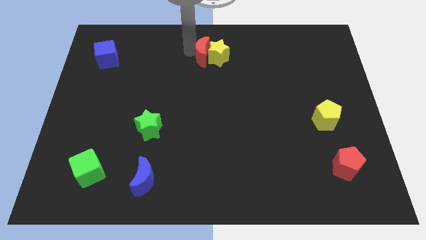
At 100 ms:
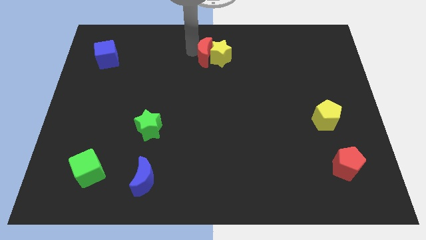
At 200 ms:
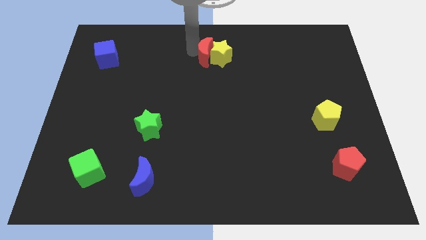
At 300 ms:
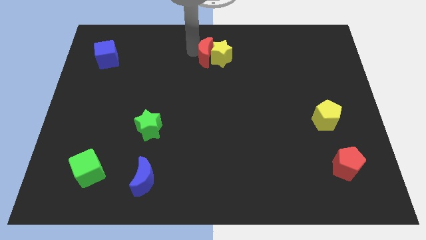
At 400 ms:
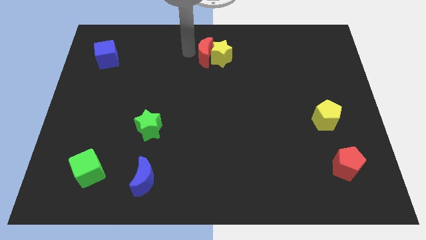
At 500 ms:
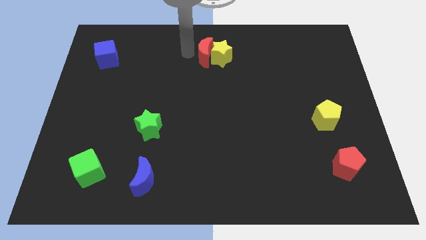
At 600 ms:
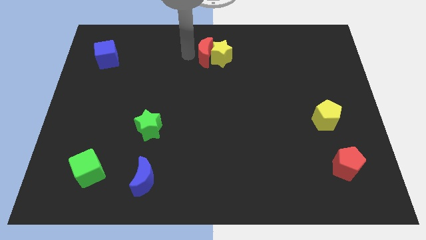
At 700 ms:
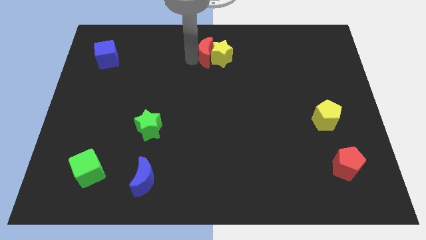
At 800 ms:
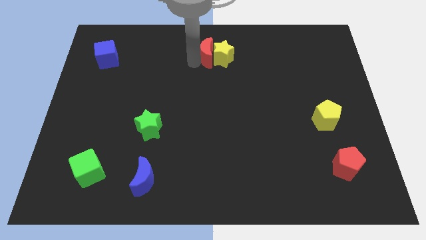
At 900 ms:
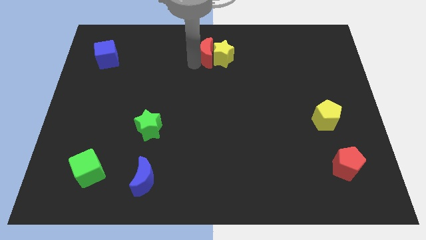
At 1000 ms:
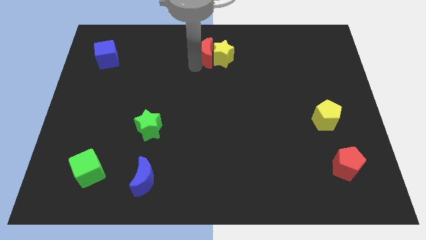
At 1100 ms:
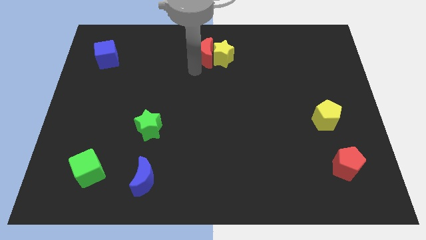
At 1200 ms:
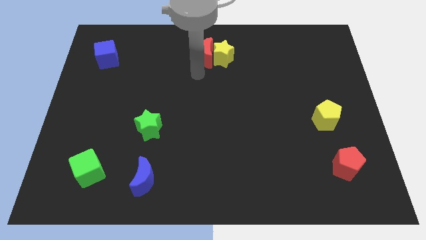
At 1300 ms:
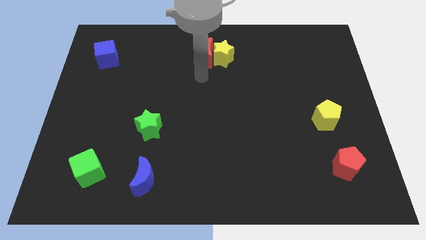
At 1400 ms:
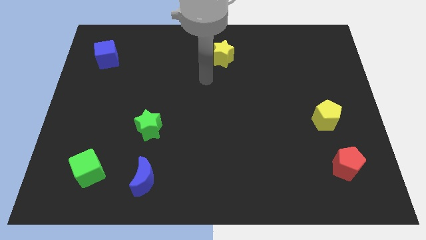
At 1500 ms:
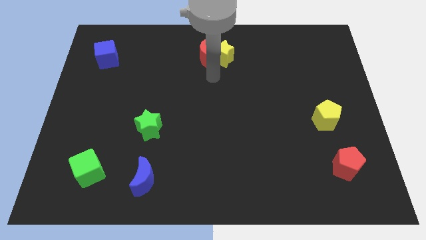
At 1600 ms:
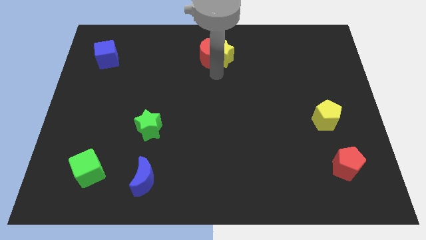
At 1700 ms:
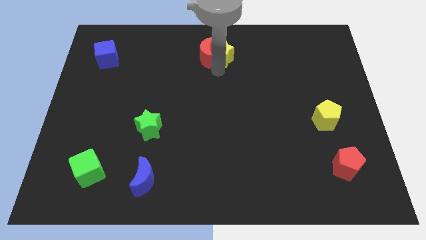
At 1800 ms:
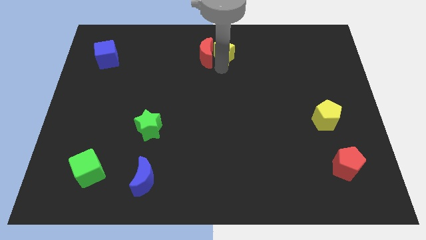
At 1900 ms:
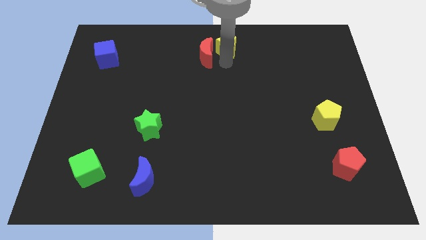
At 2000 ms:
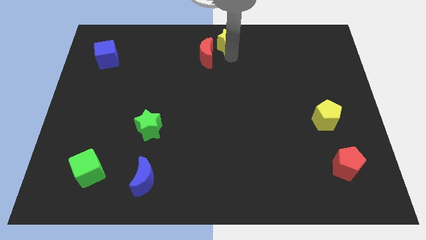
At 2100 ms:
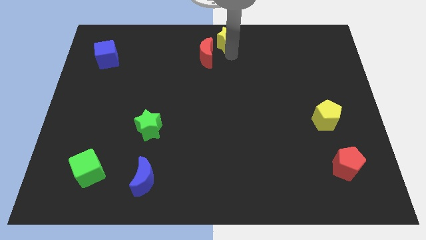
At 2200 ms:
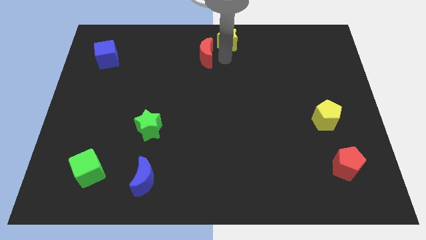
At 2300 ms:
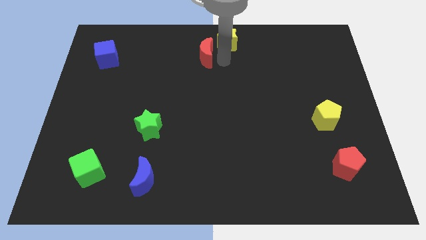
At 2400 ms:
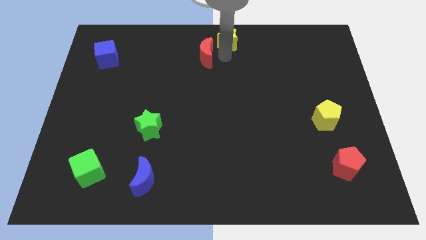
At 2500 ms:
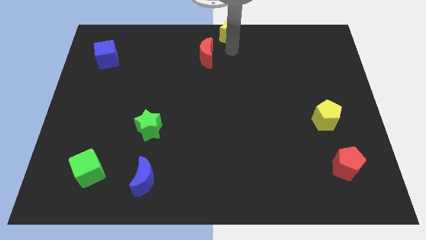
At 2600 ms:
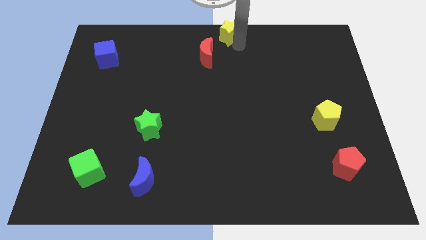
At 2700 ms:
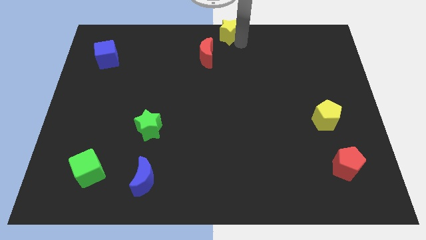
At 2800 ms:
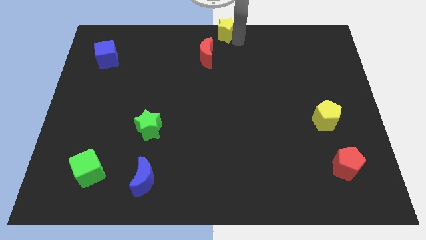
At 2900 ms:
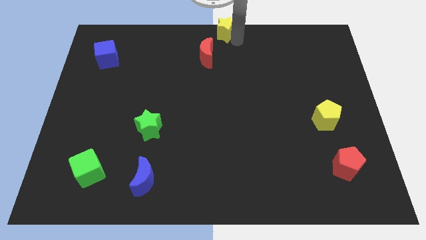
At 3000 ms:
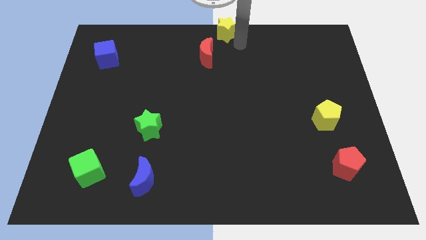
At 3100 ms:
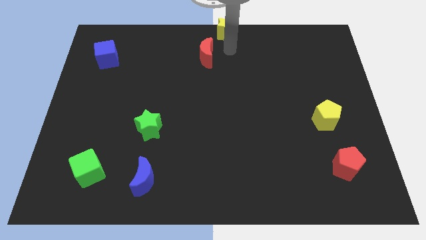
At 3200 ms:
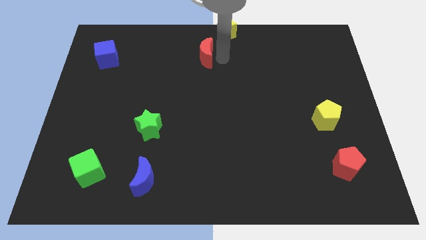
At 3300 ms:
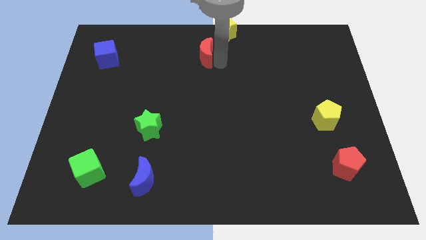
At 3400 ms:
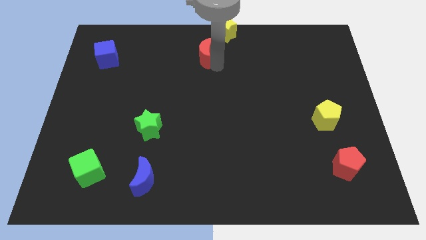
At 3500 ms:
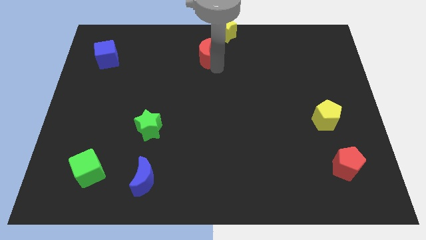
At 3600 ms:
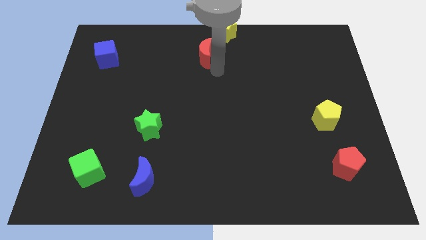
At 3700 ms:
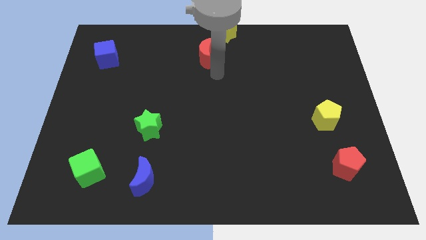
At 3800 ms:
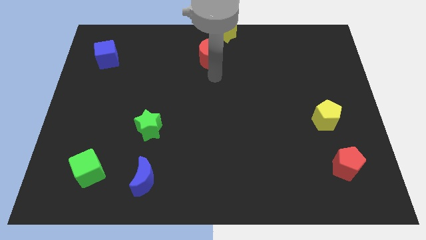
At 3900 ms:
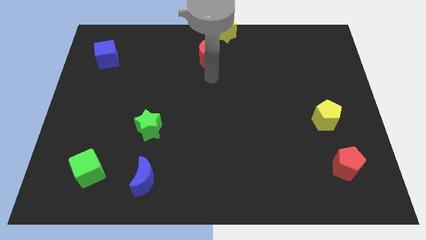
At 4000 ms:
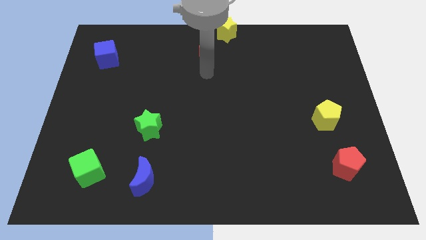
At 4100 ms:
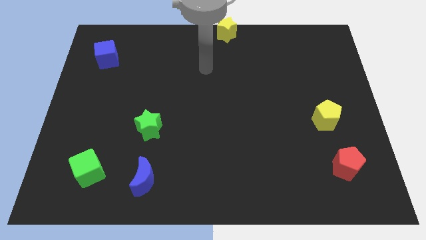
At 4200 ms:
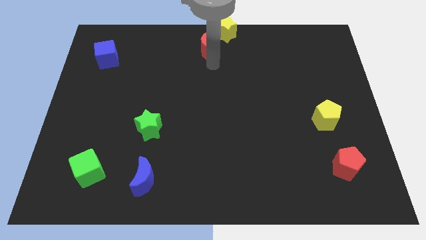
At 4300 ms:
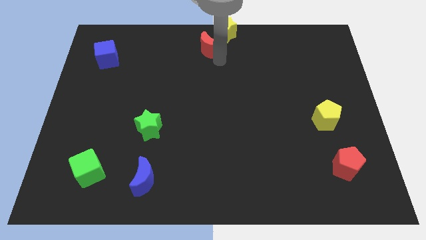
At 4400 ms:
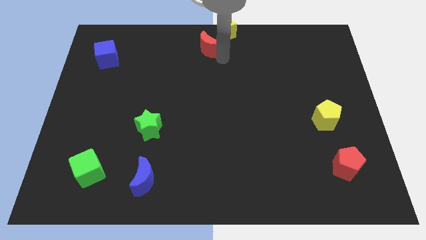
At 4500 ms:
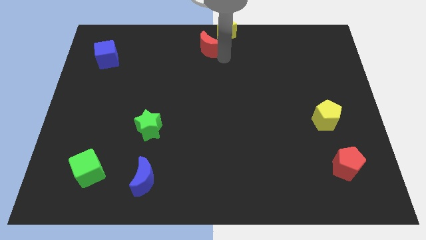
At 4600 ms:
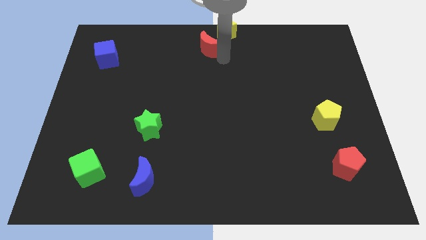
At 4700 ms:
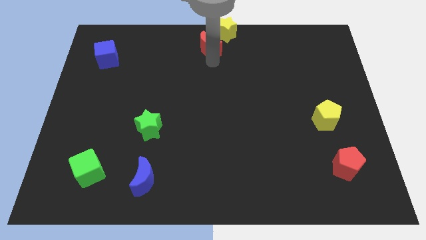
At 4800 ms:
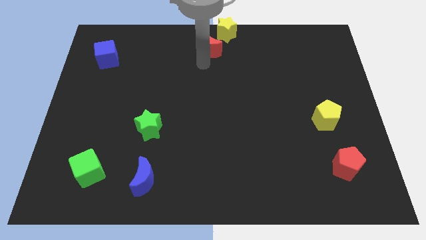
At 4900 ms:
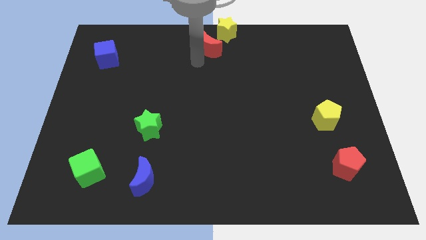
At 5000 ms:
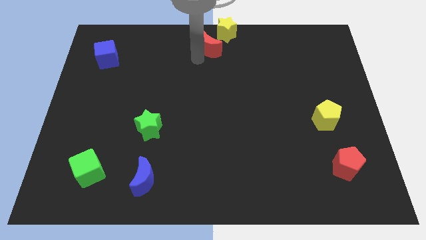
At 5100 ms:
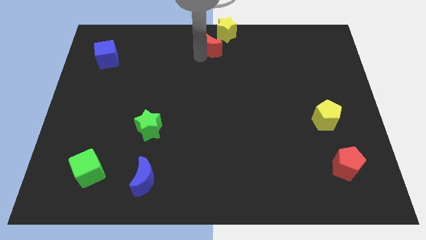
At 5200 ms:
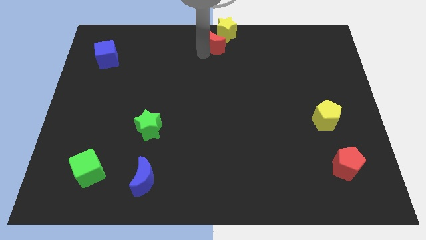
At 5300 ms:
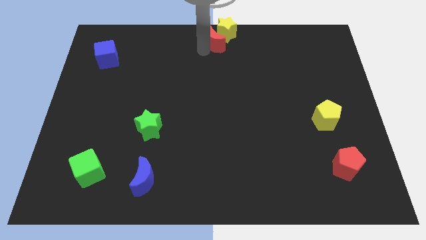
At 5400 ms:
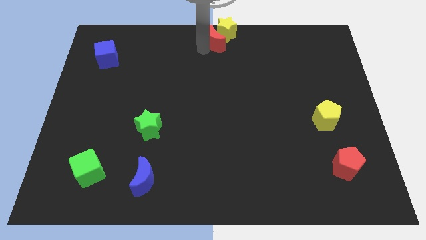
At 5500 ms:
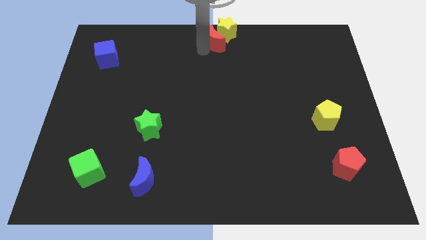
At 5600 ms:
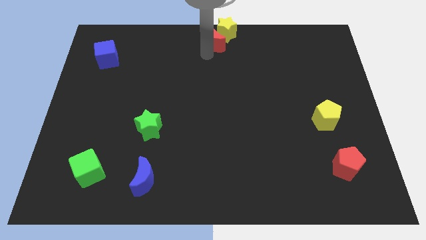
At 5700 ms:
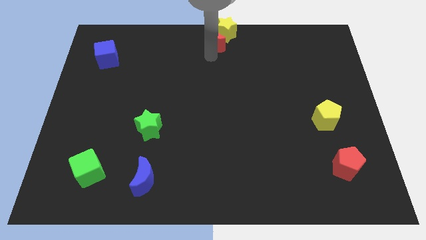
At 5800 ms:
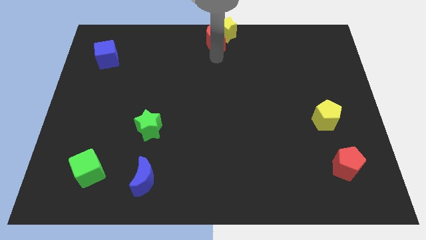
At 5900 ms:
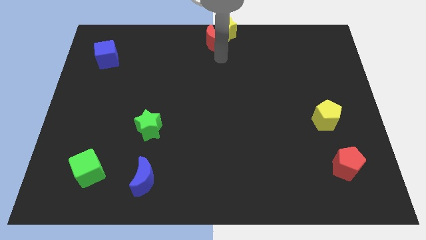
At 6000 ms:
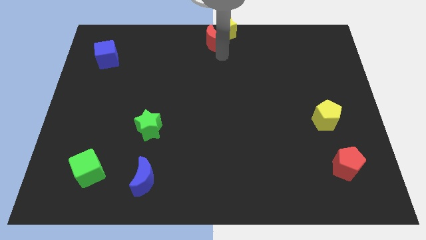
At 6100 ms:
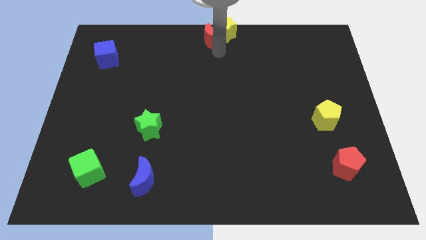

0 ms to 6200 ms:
put the red moon and the yellow star at the top center of the board

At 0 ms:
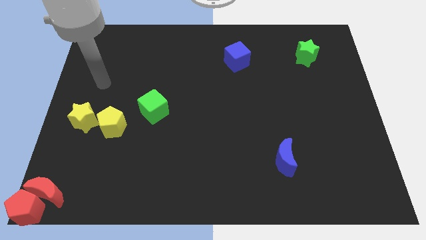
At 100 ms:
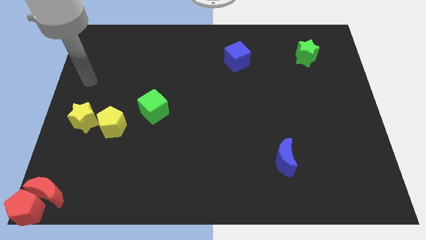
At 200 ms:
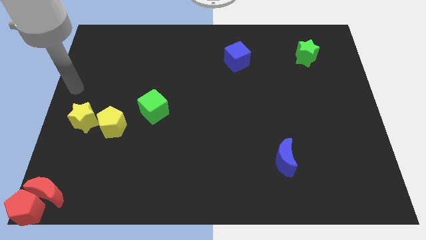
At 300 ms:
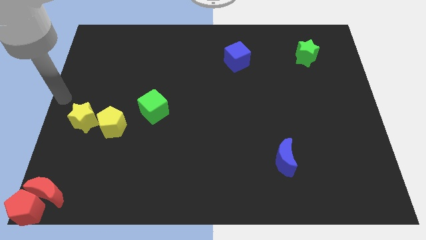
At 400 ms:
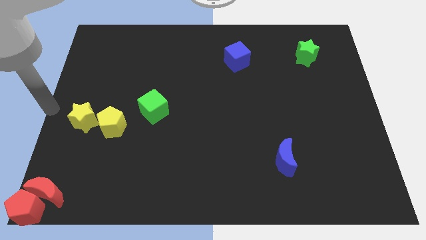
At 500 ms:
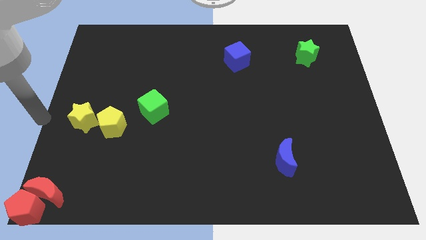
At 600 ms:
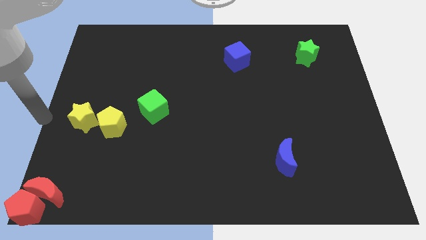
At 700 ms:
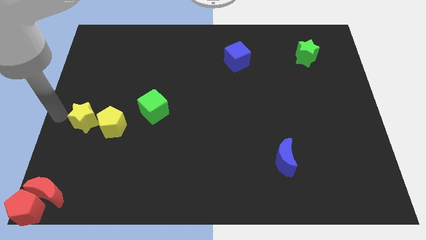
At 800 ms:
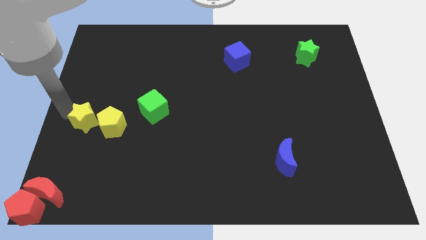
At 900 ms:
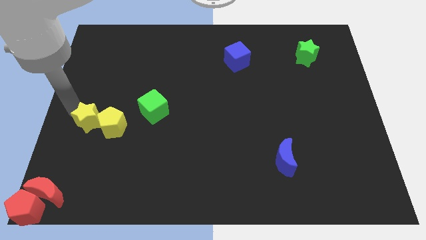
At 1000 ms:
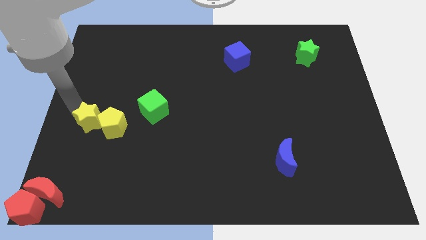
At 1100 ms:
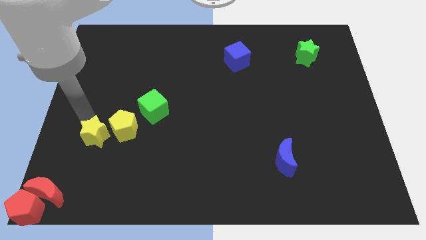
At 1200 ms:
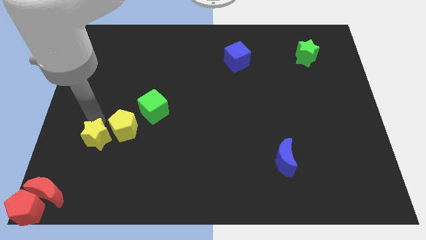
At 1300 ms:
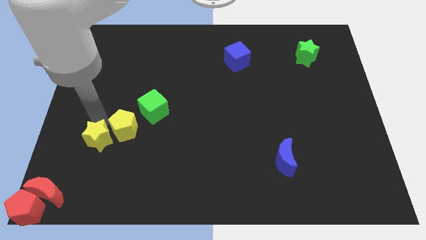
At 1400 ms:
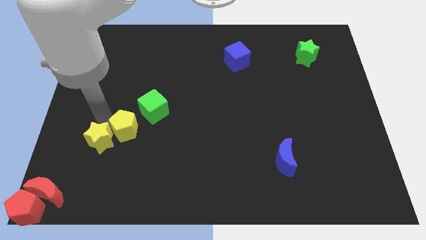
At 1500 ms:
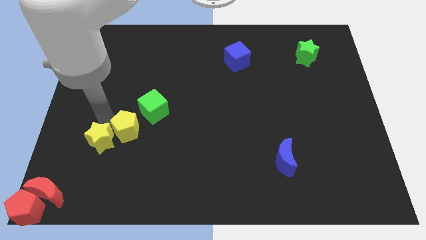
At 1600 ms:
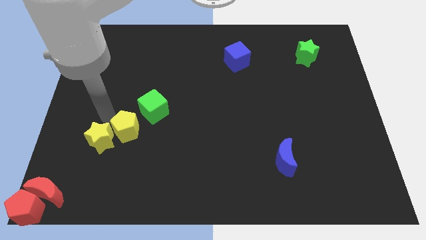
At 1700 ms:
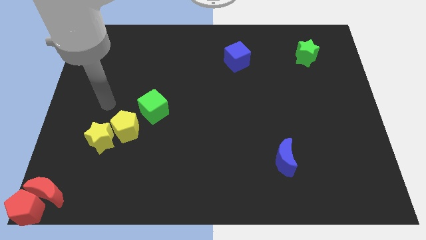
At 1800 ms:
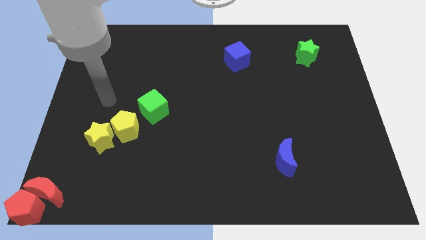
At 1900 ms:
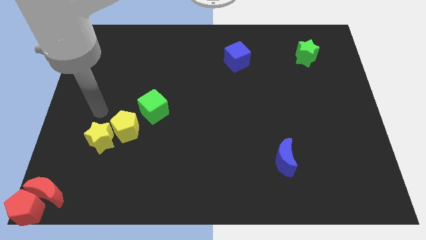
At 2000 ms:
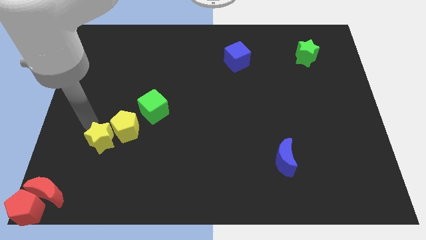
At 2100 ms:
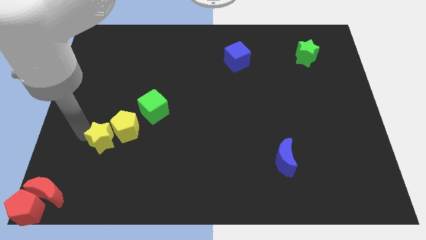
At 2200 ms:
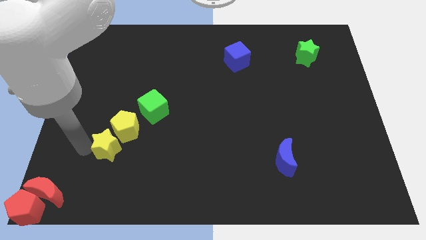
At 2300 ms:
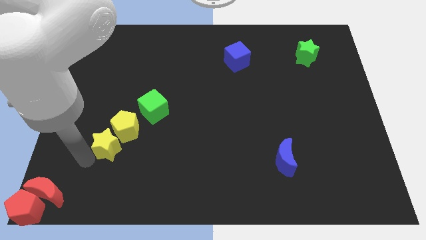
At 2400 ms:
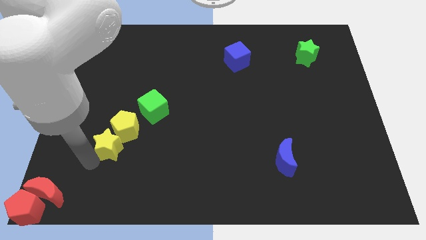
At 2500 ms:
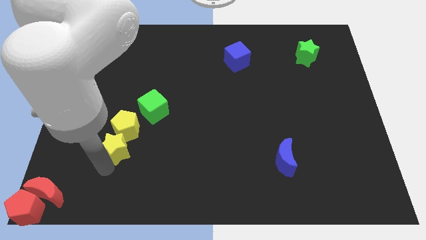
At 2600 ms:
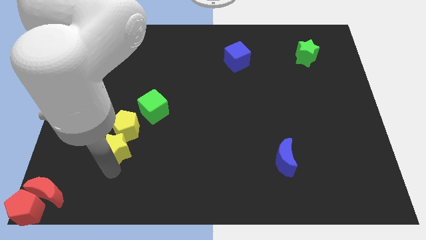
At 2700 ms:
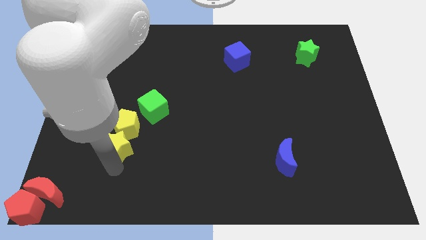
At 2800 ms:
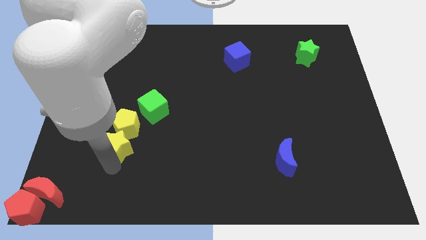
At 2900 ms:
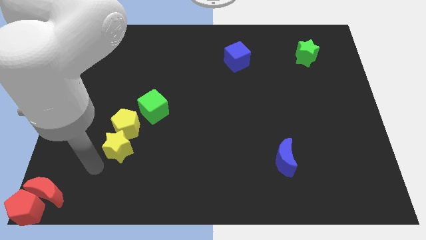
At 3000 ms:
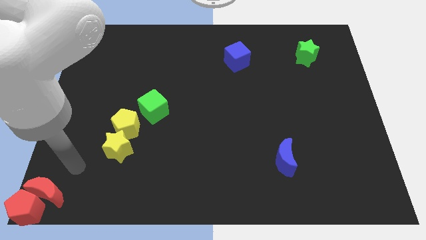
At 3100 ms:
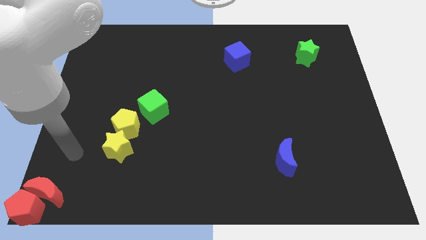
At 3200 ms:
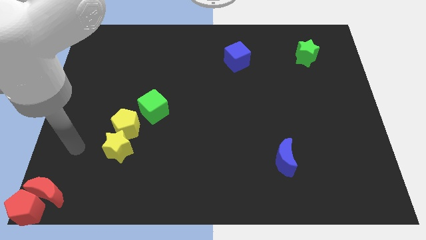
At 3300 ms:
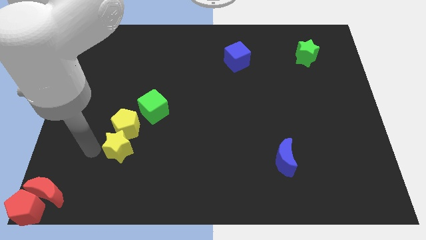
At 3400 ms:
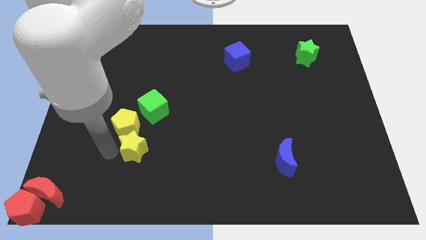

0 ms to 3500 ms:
push the yellow star to the bottom side of the yellow pentagon
